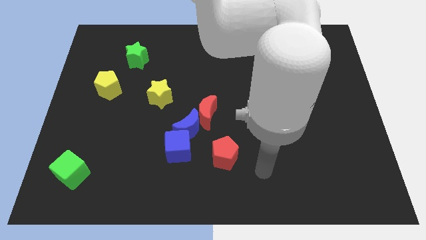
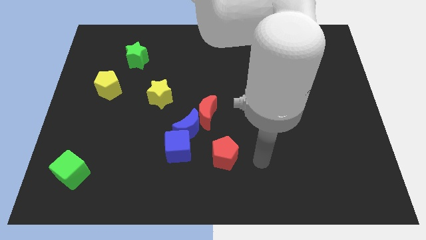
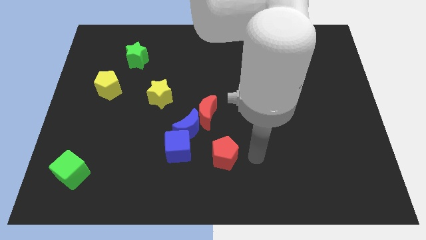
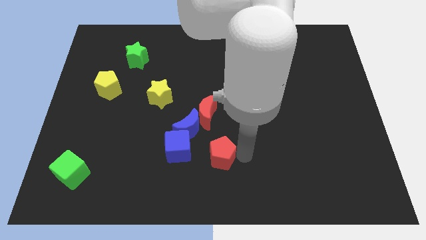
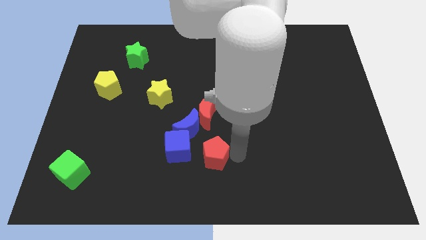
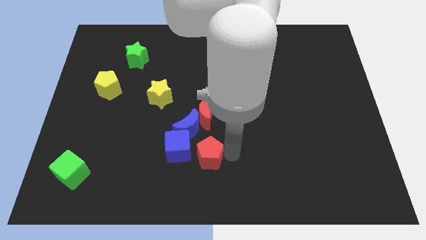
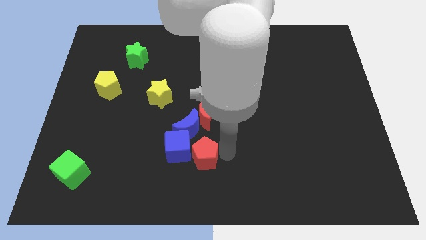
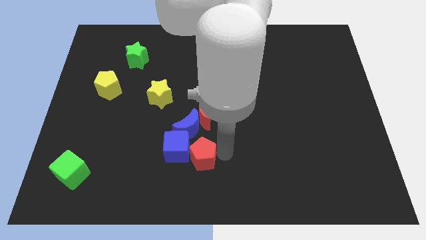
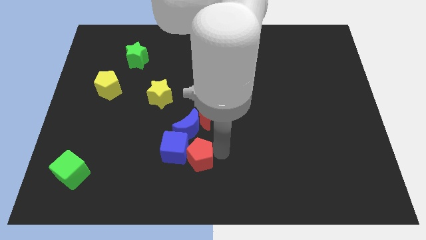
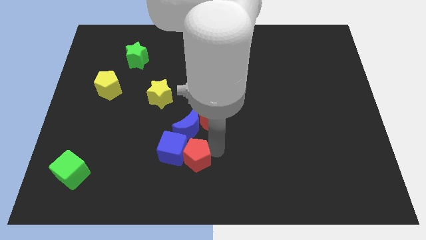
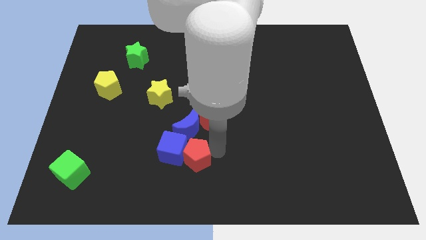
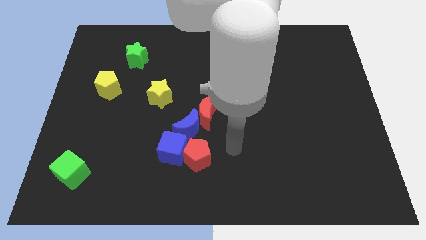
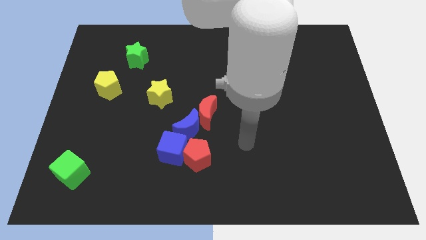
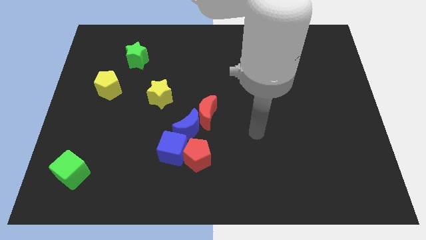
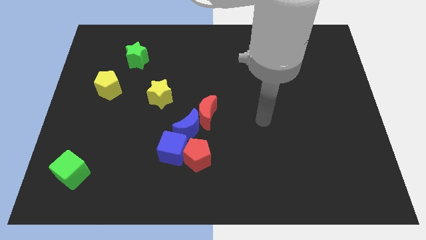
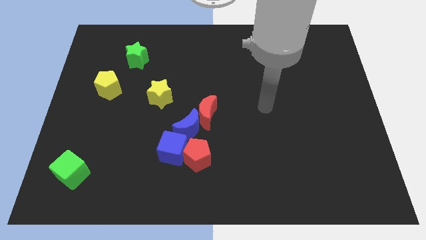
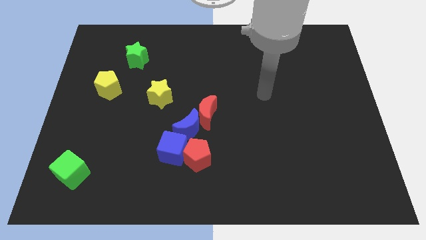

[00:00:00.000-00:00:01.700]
put the red pentagon into the blue moon

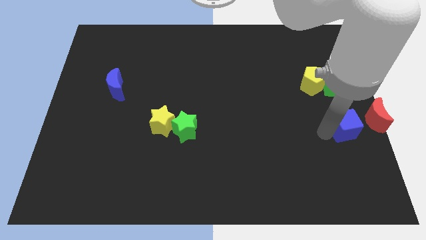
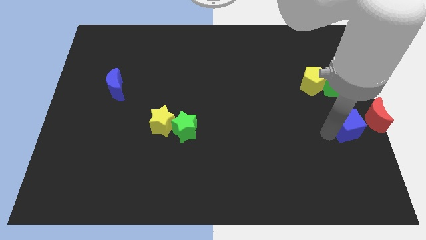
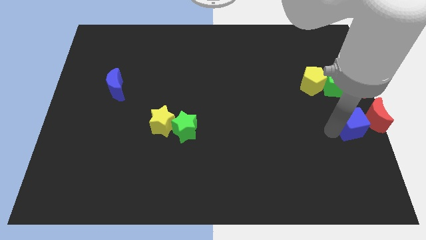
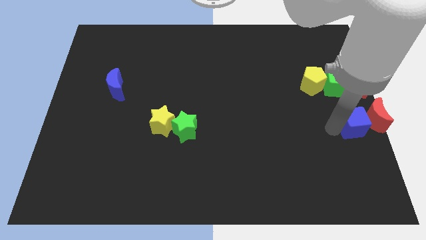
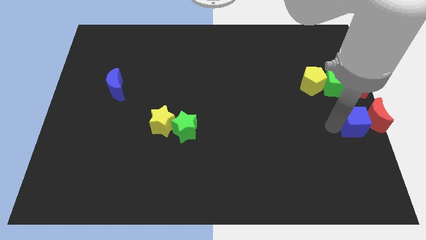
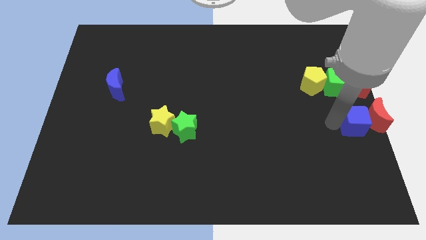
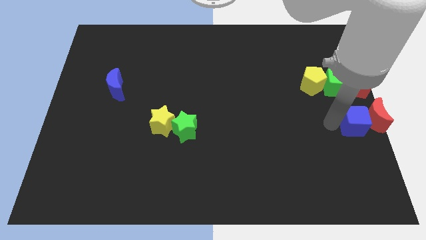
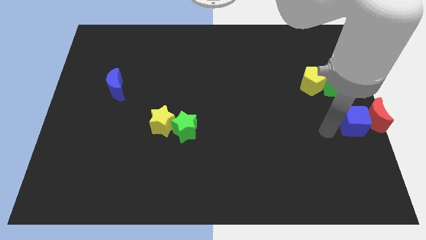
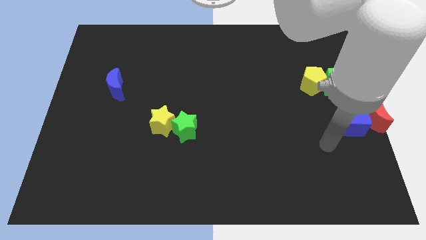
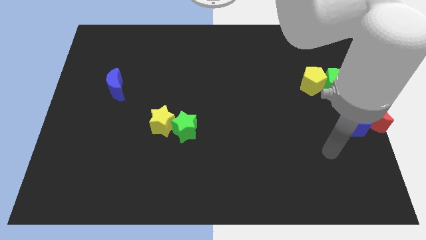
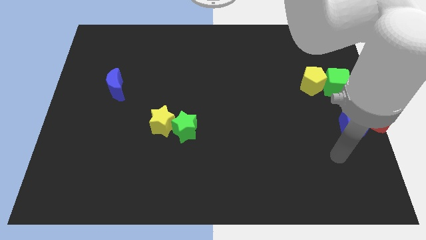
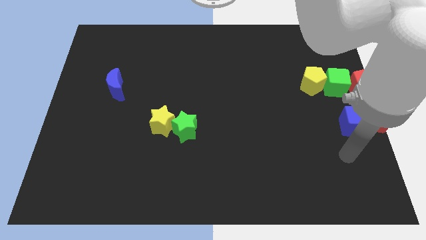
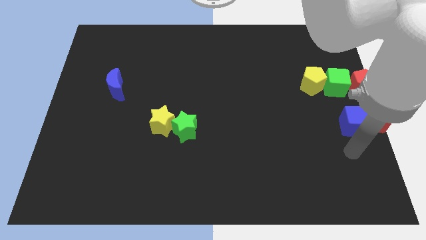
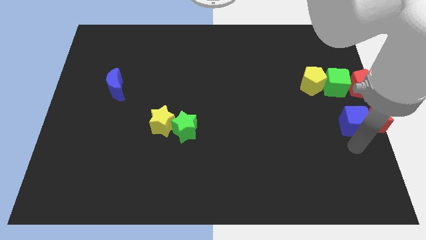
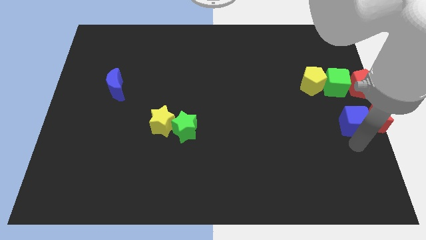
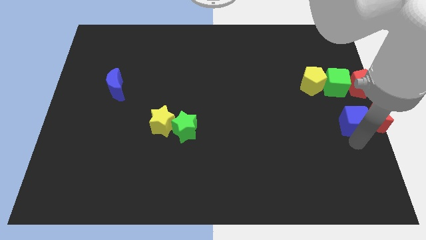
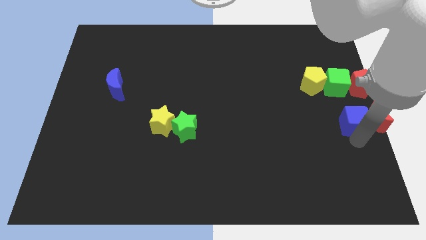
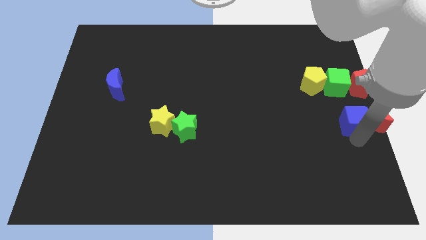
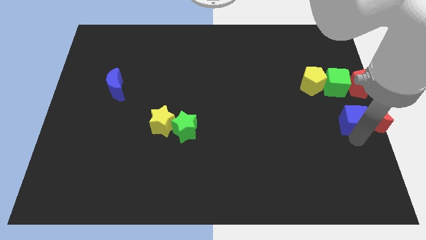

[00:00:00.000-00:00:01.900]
move the blue cube to the red crescent

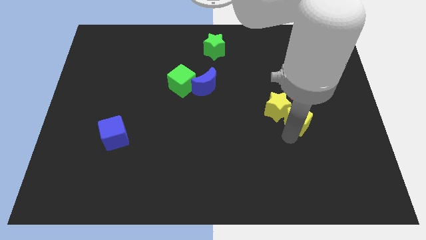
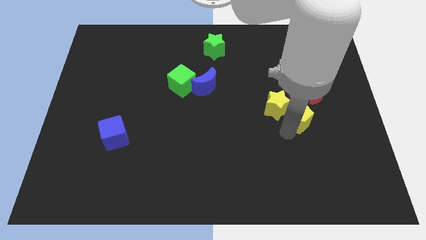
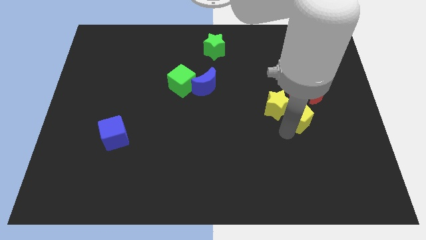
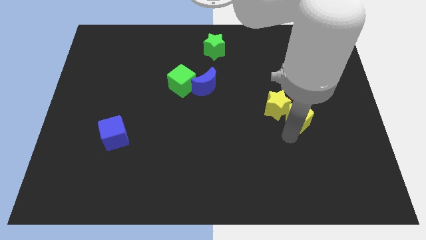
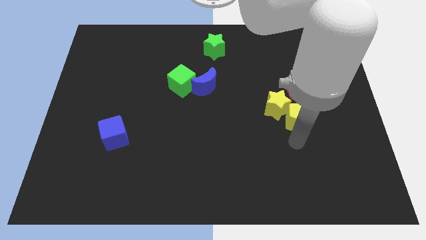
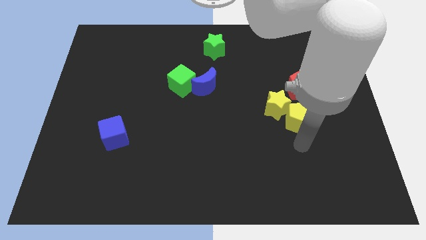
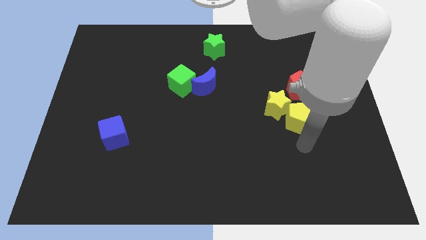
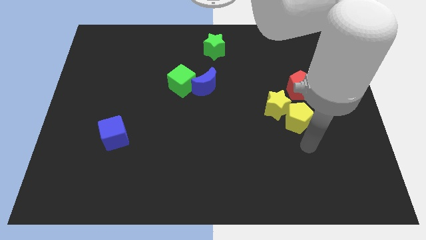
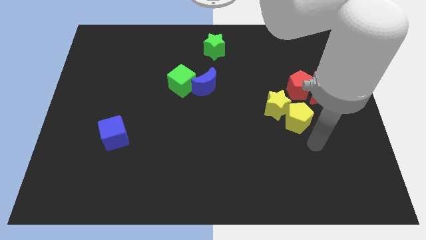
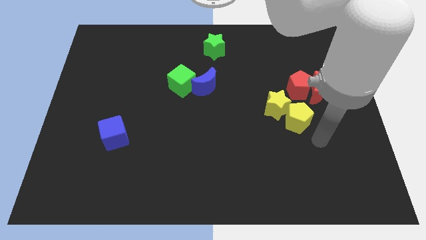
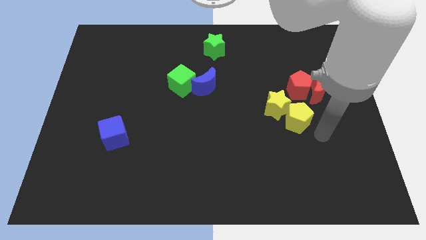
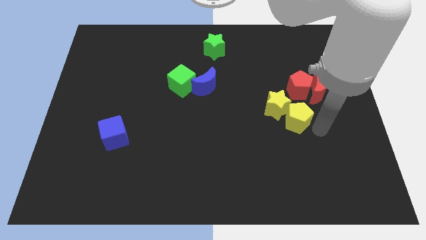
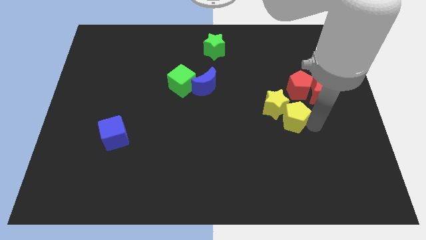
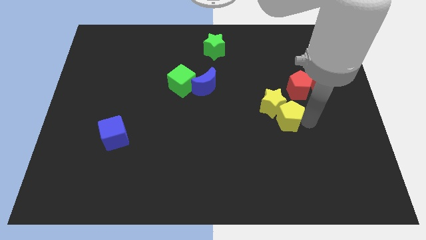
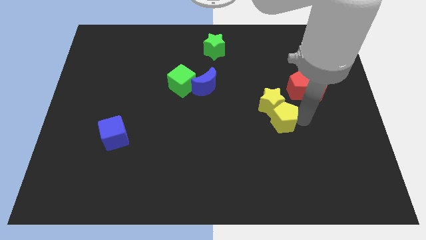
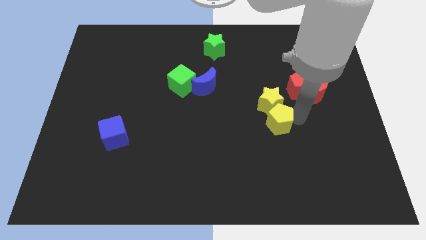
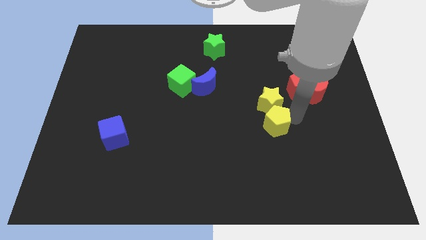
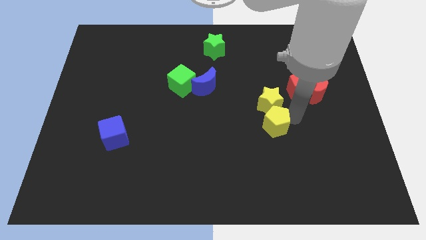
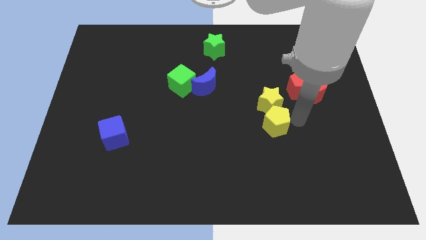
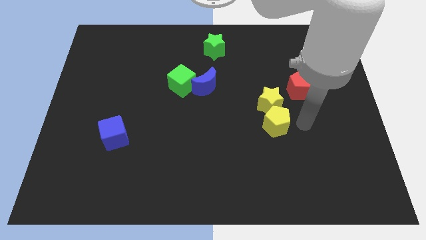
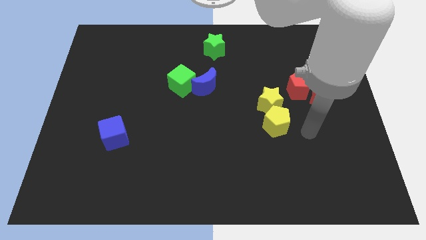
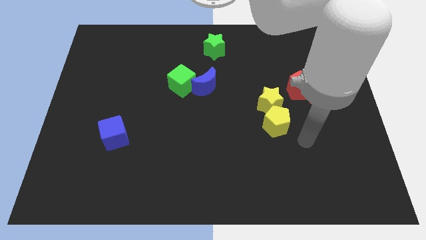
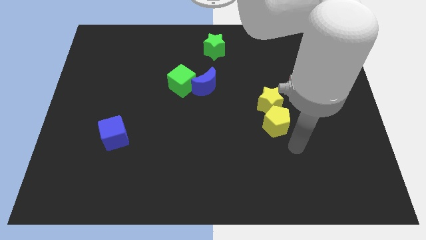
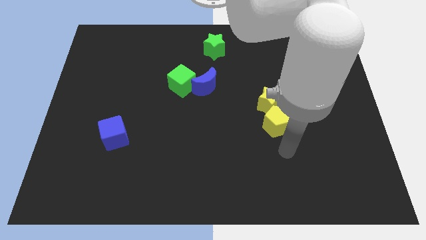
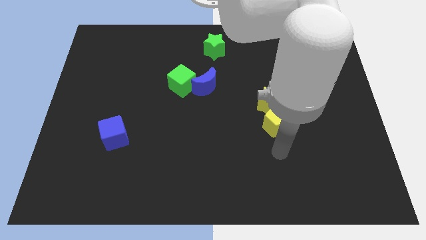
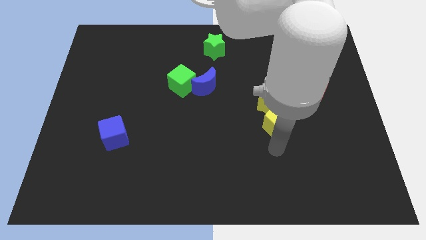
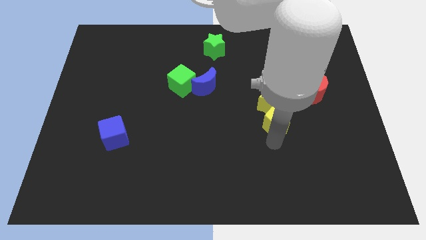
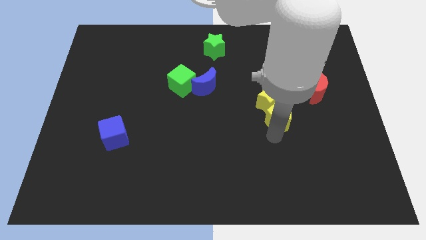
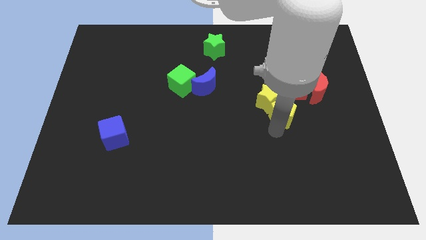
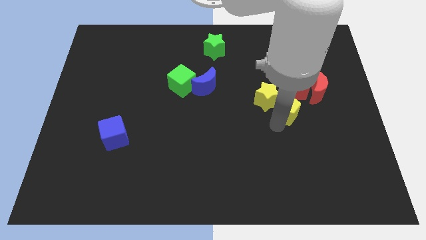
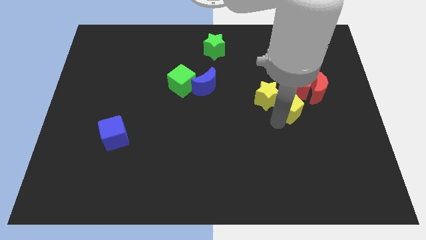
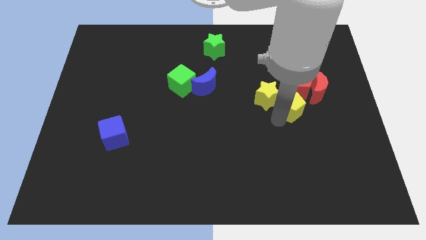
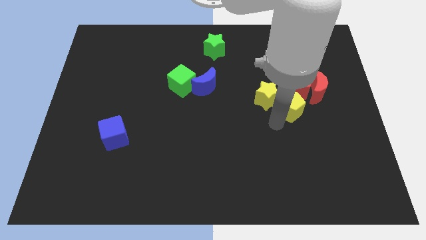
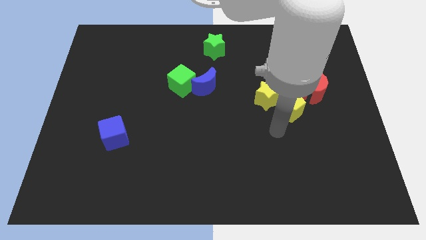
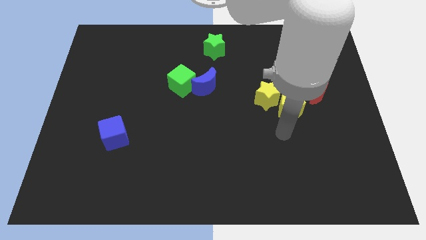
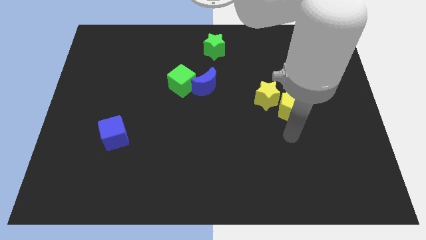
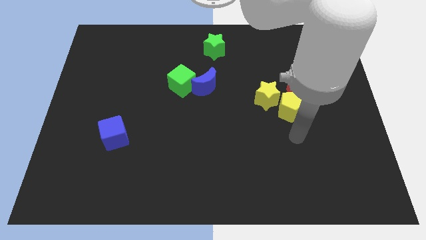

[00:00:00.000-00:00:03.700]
push yellow blocks towards red blocks

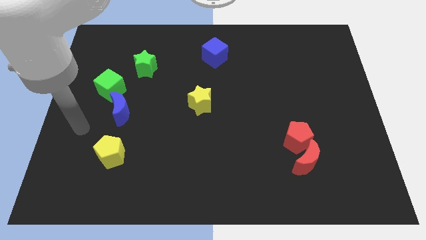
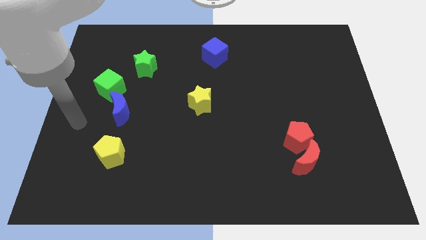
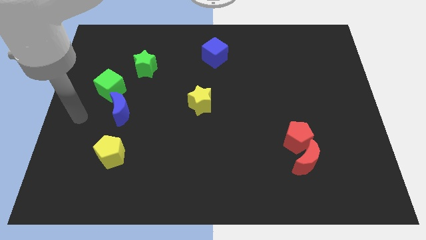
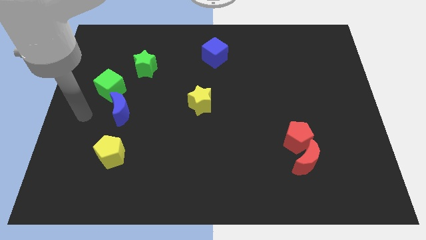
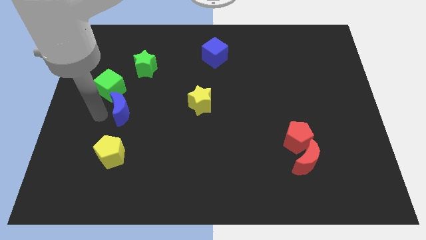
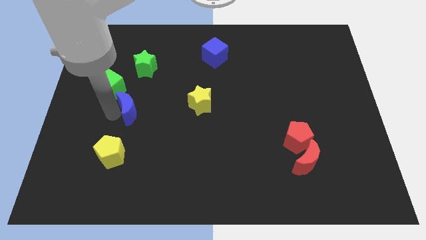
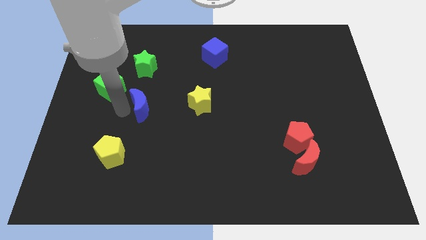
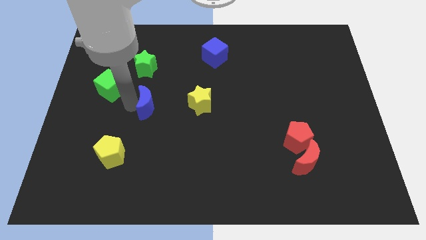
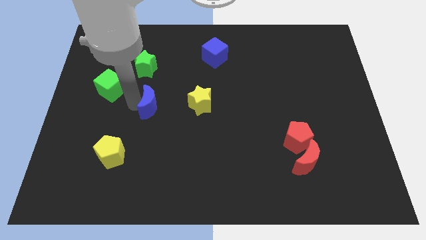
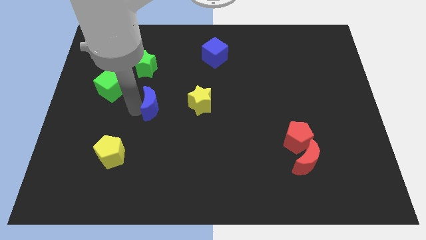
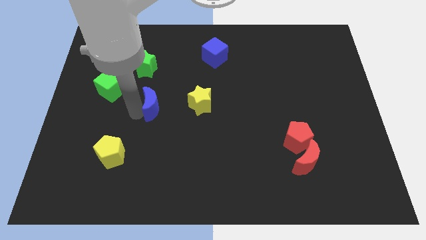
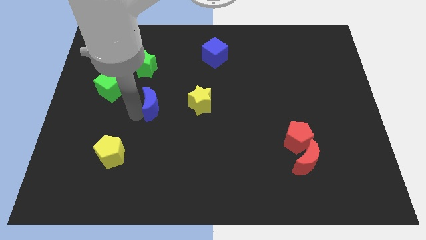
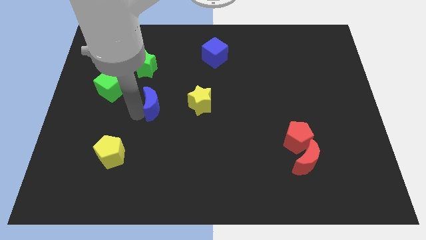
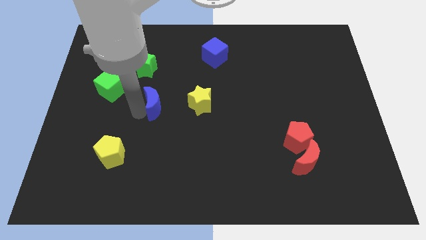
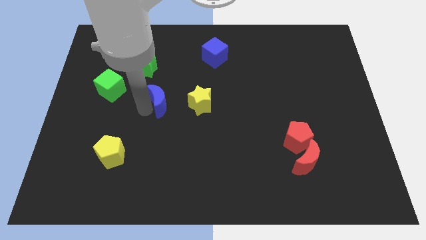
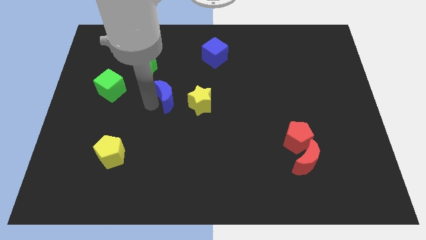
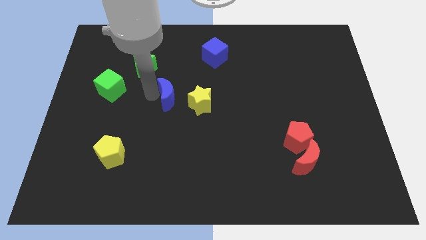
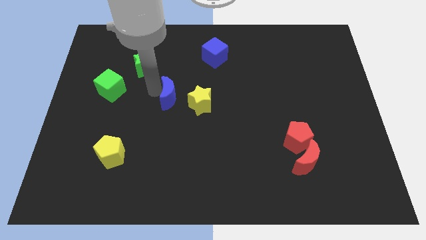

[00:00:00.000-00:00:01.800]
push the blue crescent away from the green cube
